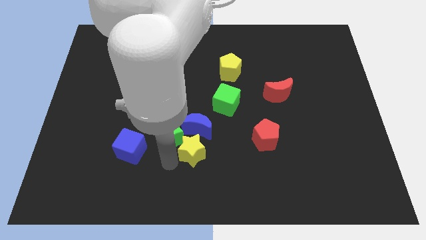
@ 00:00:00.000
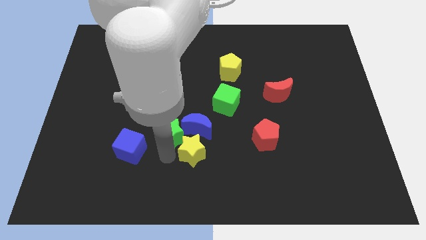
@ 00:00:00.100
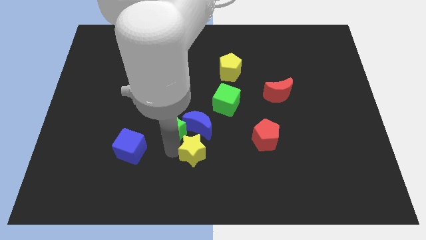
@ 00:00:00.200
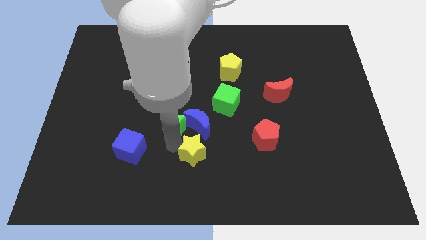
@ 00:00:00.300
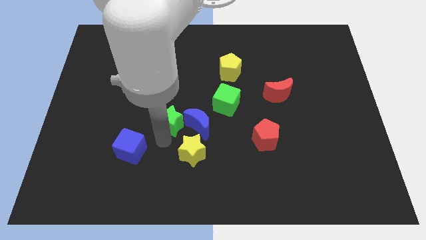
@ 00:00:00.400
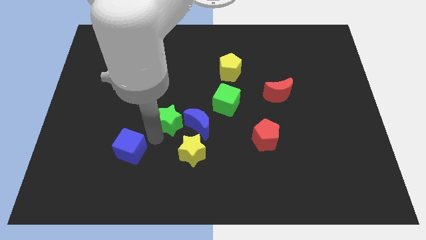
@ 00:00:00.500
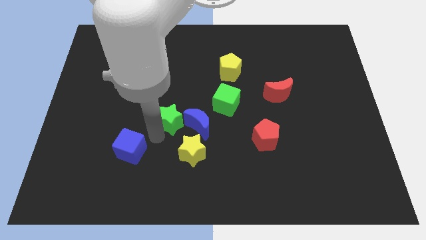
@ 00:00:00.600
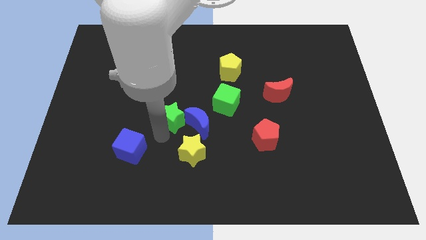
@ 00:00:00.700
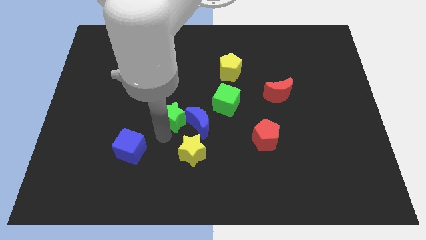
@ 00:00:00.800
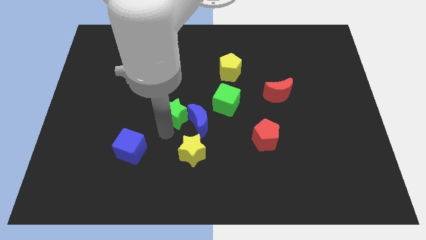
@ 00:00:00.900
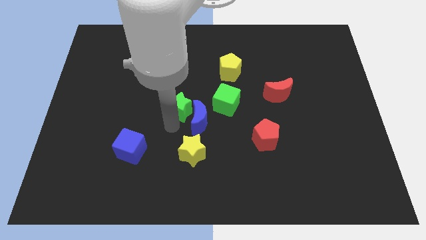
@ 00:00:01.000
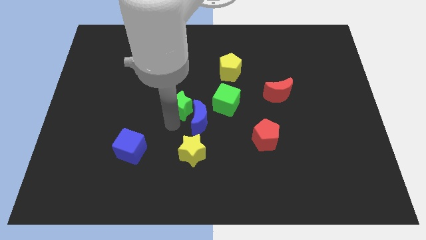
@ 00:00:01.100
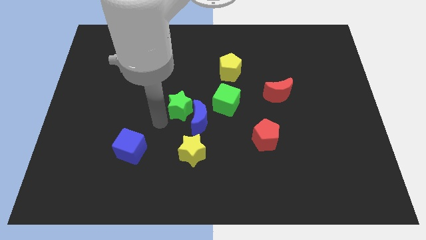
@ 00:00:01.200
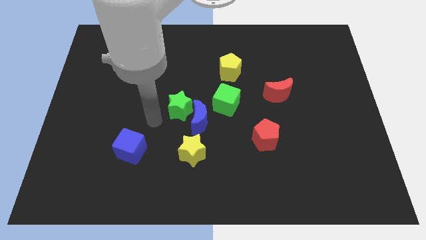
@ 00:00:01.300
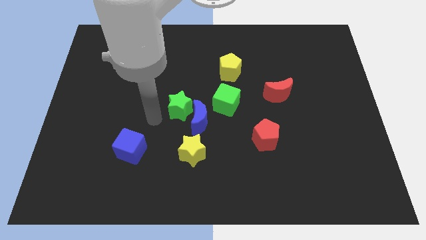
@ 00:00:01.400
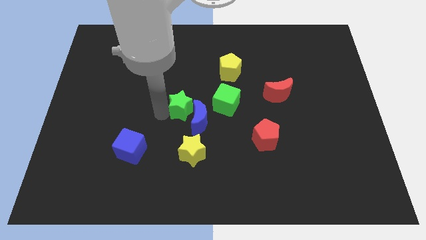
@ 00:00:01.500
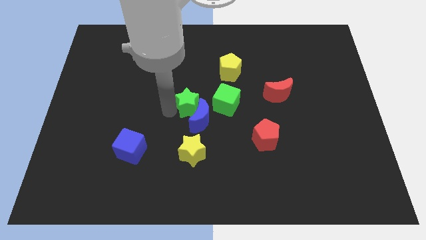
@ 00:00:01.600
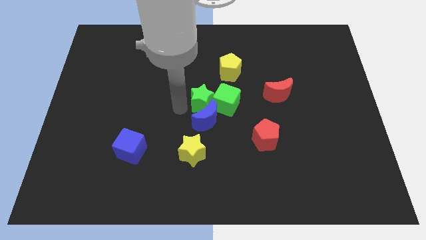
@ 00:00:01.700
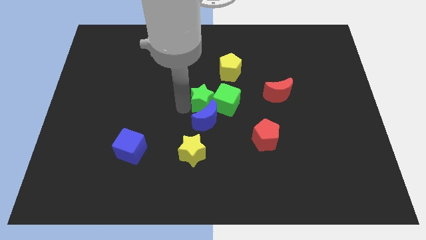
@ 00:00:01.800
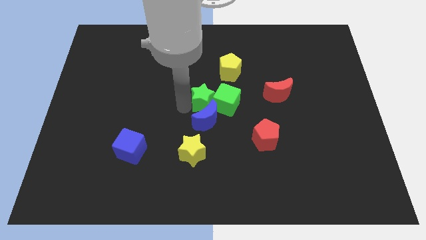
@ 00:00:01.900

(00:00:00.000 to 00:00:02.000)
push the green star to the left of the green cube

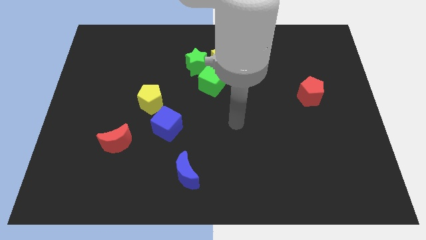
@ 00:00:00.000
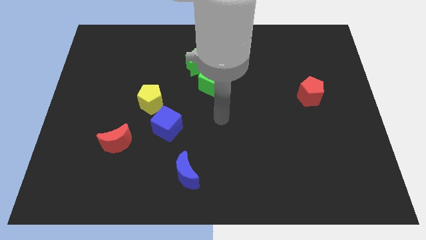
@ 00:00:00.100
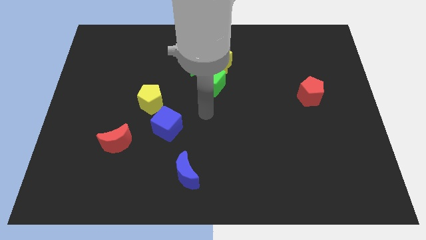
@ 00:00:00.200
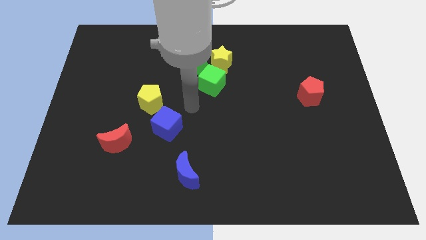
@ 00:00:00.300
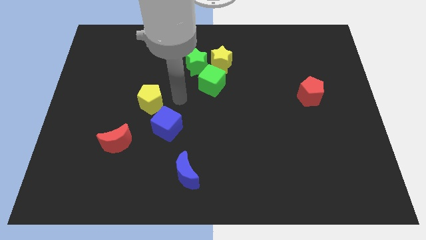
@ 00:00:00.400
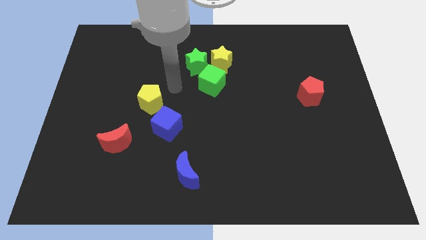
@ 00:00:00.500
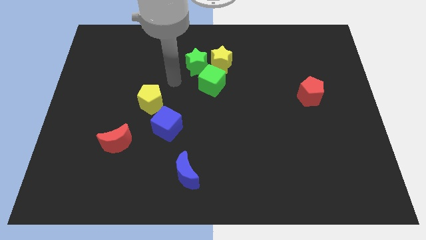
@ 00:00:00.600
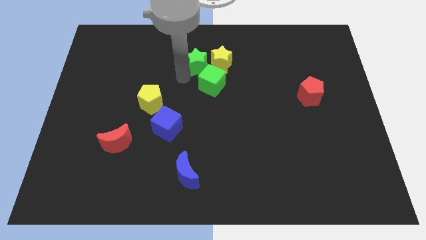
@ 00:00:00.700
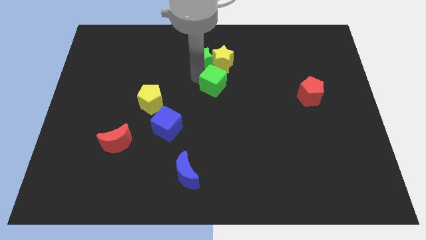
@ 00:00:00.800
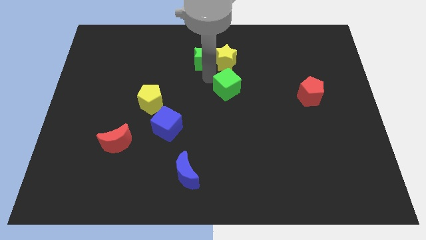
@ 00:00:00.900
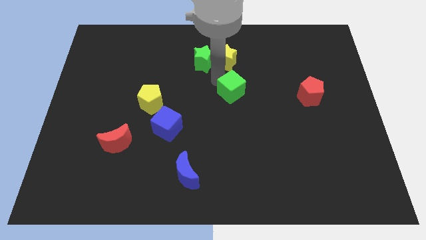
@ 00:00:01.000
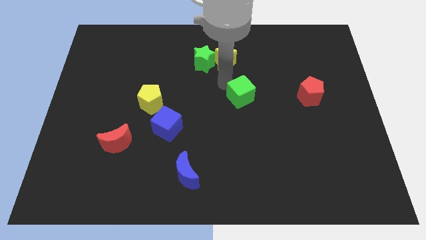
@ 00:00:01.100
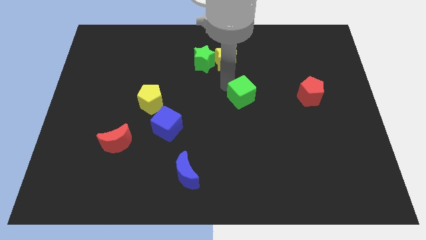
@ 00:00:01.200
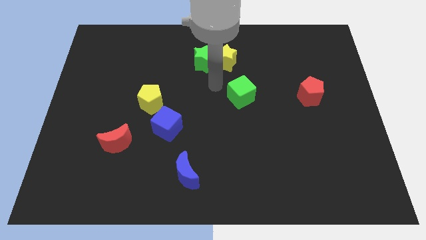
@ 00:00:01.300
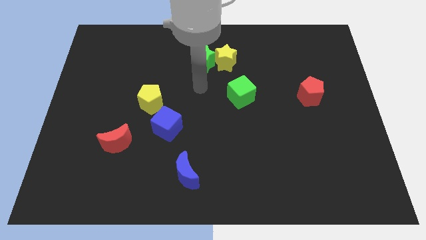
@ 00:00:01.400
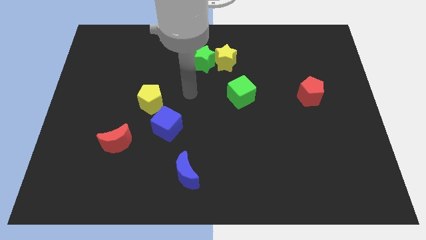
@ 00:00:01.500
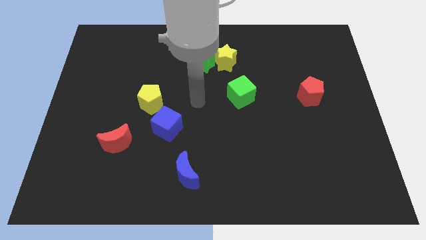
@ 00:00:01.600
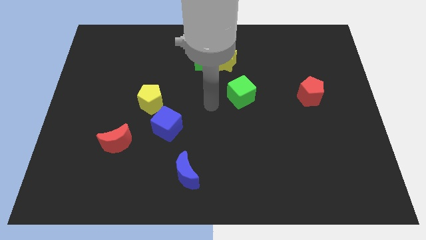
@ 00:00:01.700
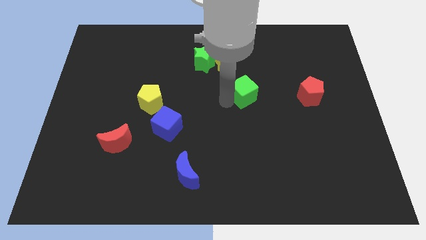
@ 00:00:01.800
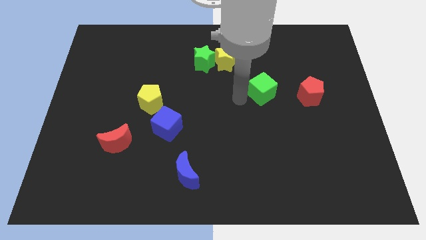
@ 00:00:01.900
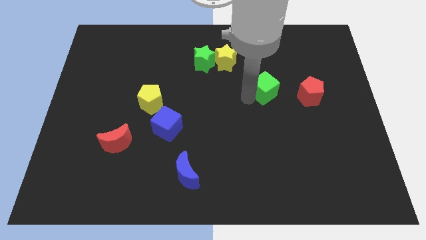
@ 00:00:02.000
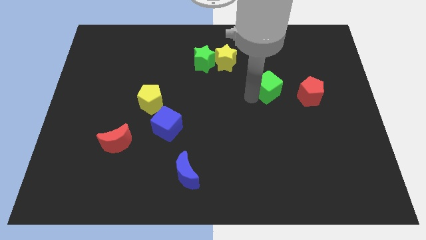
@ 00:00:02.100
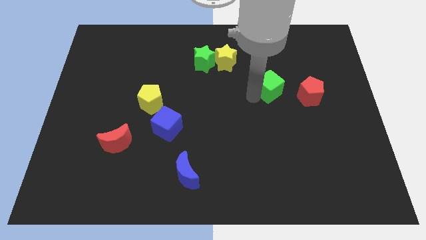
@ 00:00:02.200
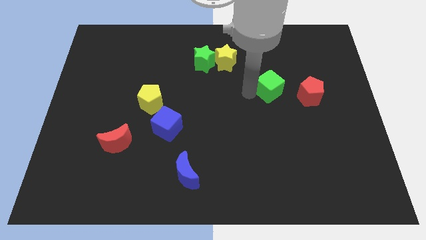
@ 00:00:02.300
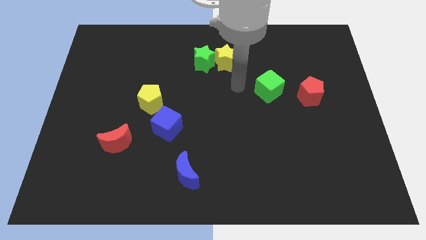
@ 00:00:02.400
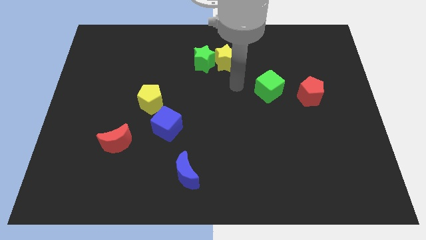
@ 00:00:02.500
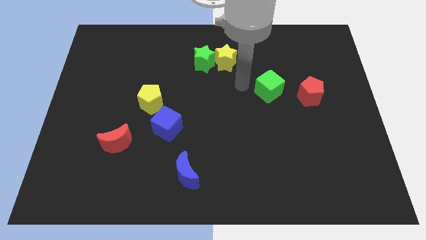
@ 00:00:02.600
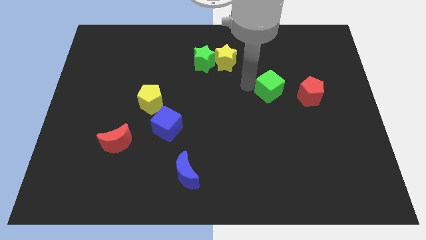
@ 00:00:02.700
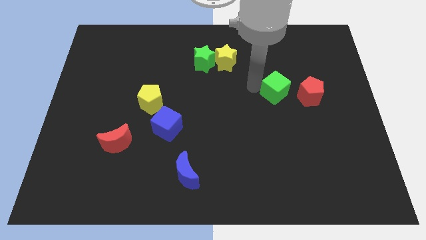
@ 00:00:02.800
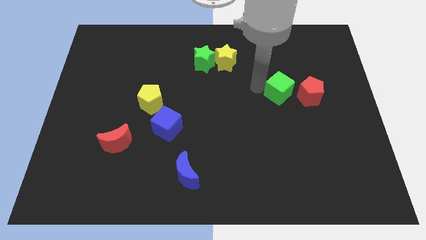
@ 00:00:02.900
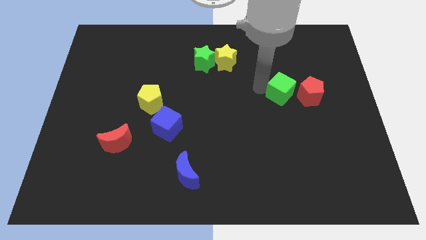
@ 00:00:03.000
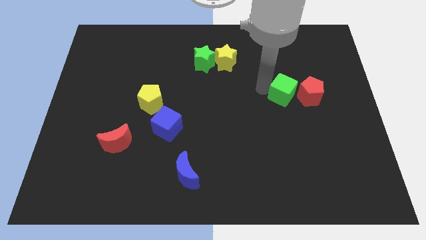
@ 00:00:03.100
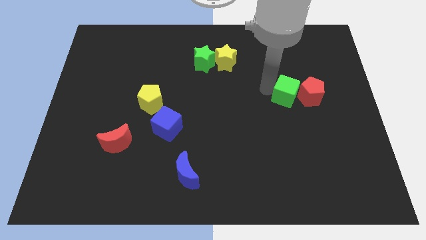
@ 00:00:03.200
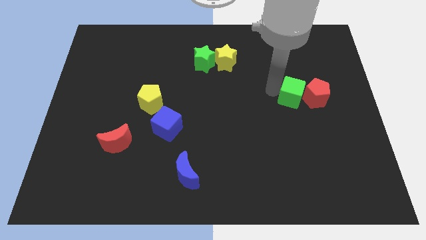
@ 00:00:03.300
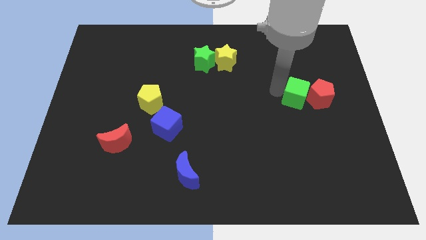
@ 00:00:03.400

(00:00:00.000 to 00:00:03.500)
separate the green star and green cube

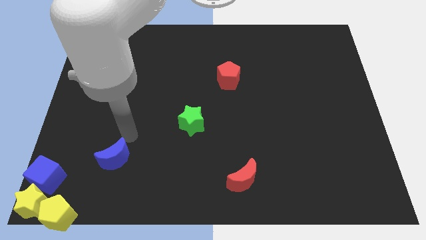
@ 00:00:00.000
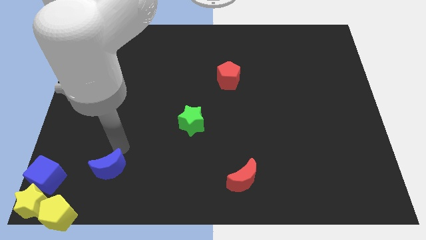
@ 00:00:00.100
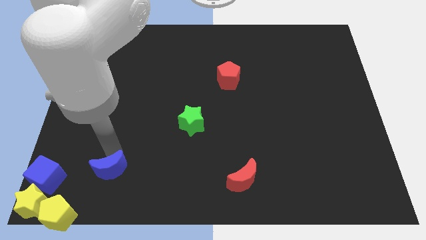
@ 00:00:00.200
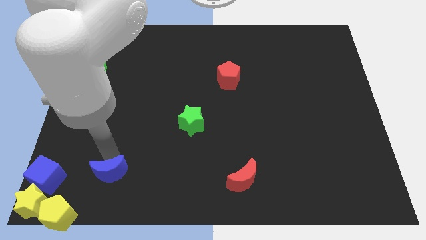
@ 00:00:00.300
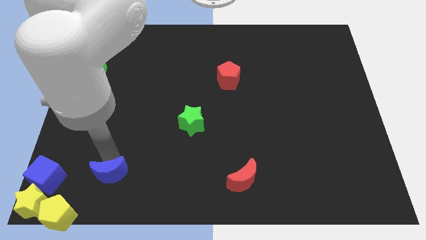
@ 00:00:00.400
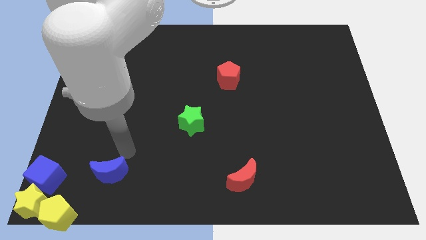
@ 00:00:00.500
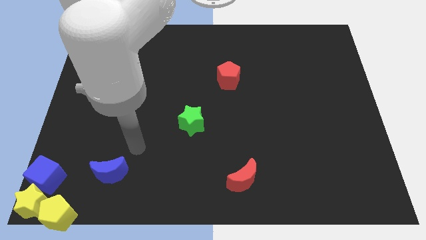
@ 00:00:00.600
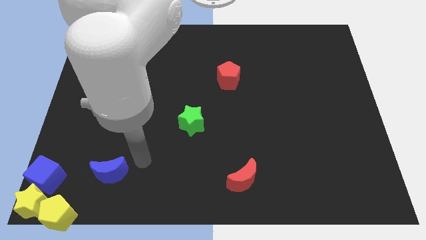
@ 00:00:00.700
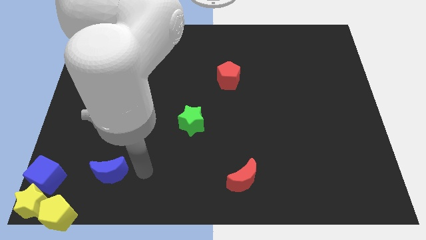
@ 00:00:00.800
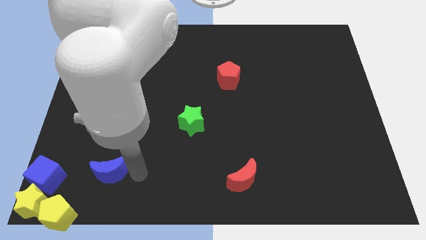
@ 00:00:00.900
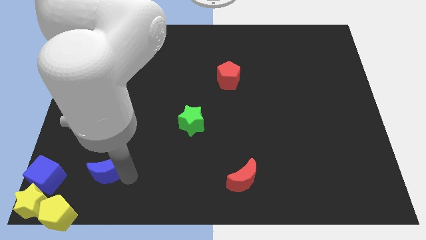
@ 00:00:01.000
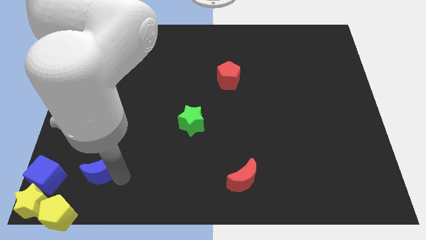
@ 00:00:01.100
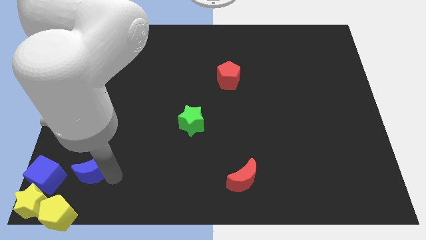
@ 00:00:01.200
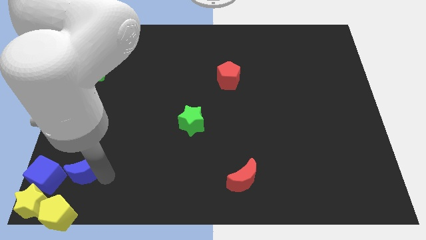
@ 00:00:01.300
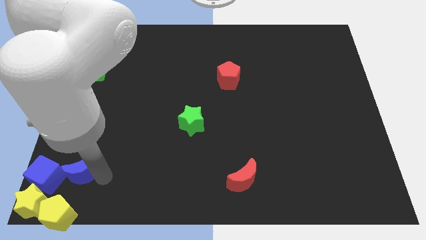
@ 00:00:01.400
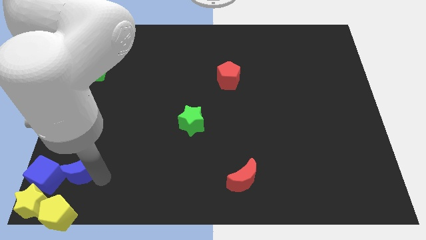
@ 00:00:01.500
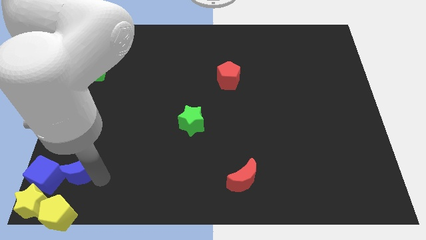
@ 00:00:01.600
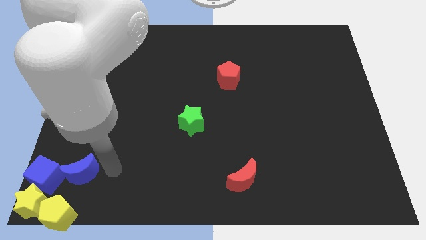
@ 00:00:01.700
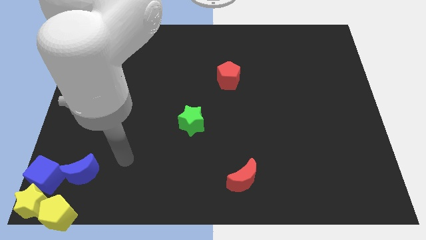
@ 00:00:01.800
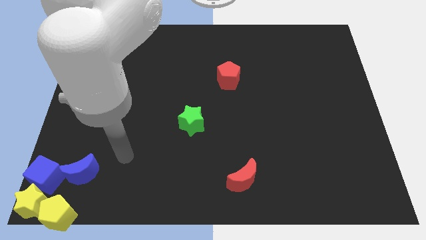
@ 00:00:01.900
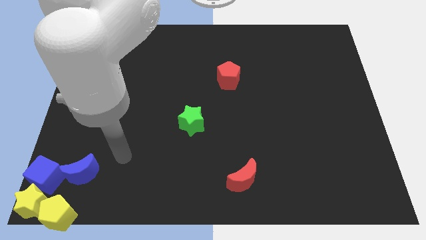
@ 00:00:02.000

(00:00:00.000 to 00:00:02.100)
slide blue moon into blue cube

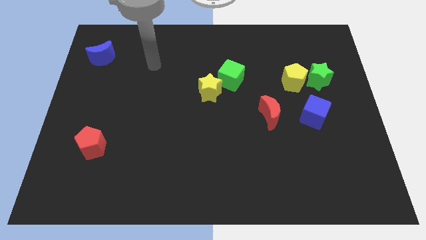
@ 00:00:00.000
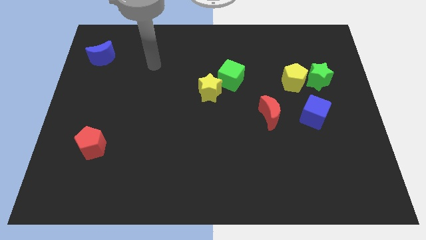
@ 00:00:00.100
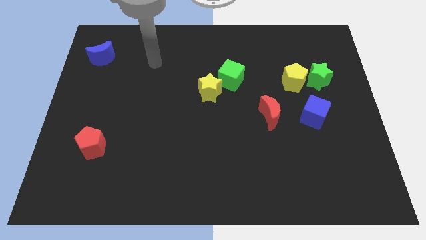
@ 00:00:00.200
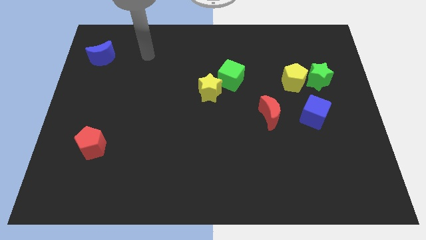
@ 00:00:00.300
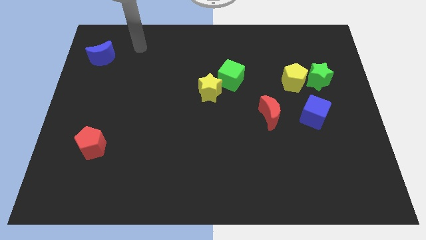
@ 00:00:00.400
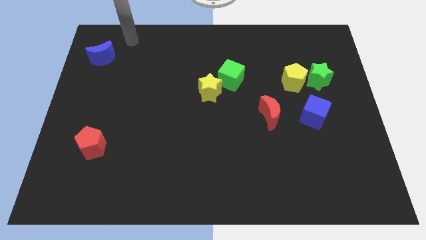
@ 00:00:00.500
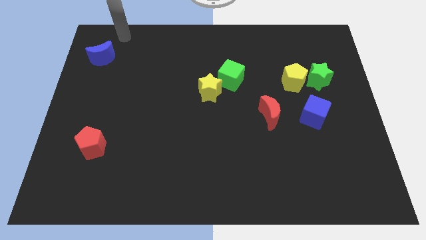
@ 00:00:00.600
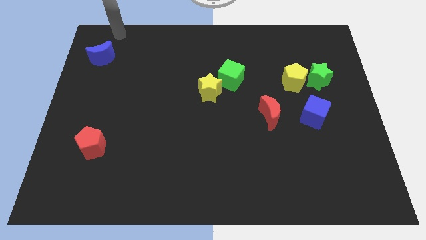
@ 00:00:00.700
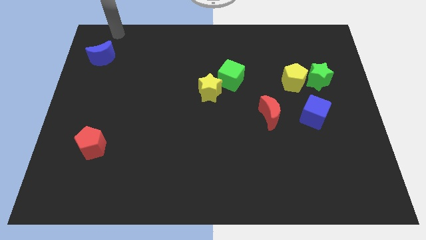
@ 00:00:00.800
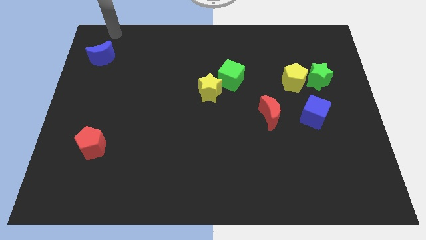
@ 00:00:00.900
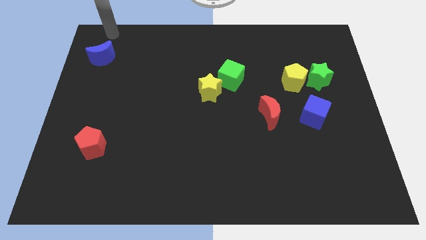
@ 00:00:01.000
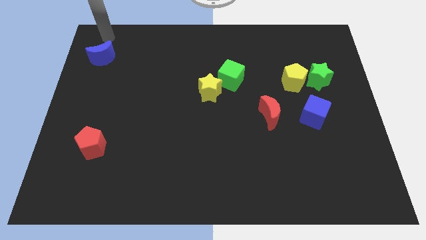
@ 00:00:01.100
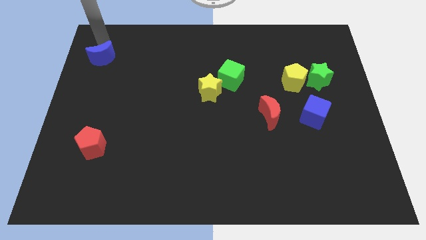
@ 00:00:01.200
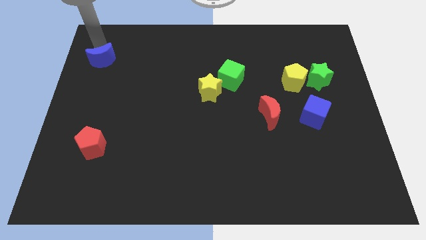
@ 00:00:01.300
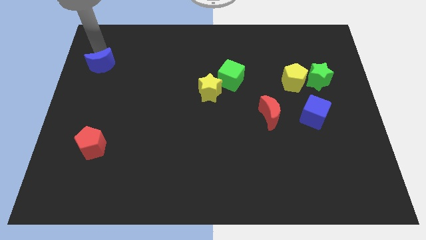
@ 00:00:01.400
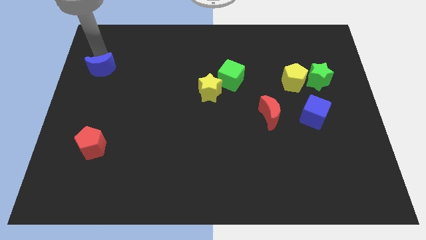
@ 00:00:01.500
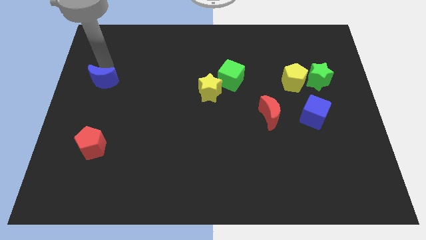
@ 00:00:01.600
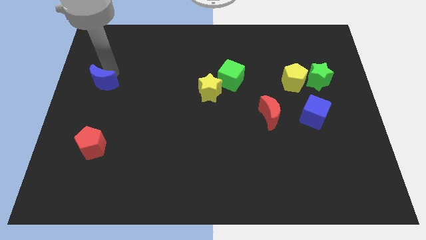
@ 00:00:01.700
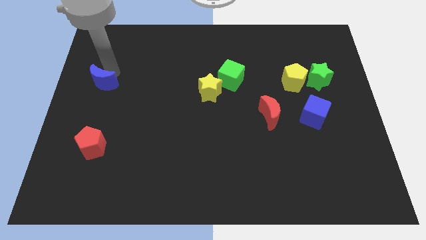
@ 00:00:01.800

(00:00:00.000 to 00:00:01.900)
push the blue moon towards the red pentagon
